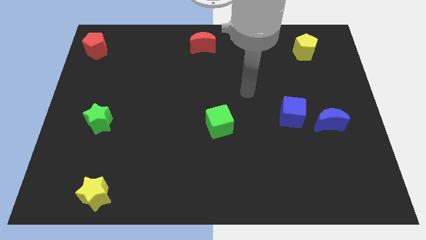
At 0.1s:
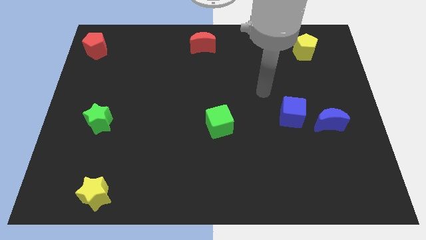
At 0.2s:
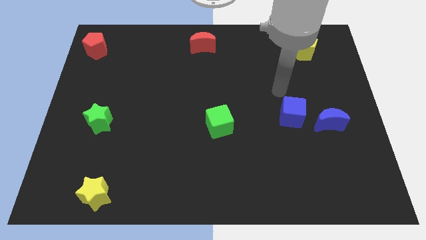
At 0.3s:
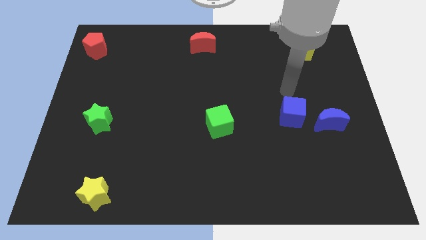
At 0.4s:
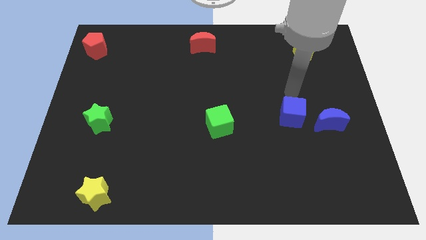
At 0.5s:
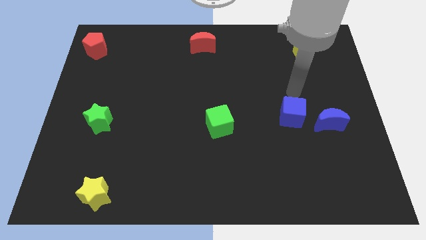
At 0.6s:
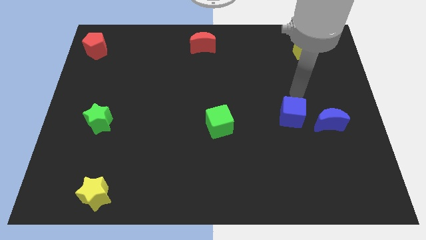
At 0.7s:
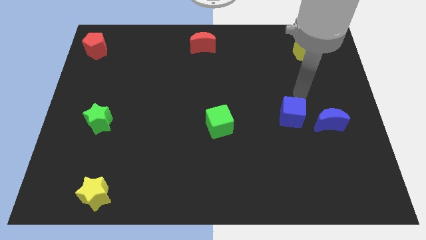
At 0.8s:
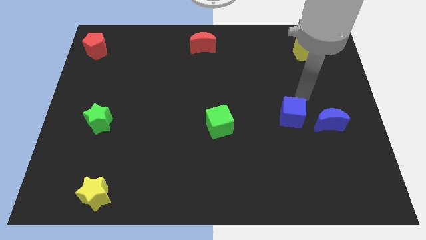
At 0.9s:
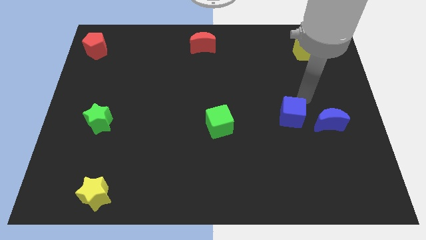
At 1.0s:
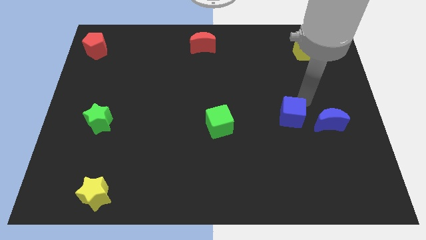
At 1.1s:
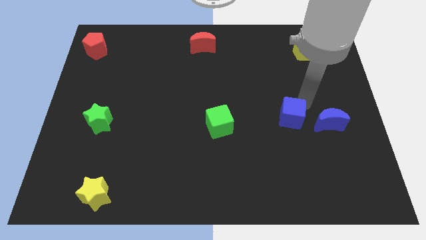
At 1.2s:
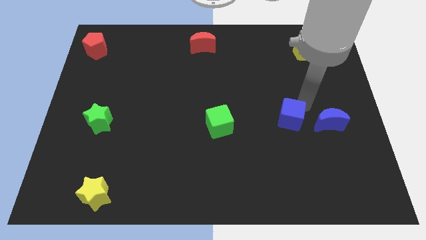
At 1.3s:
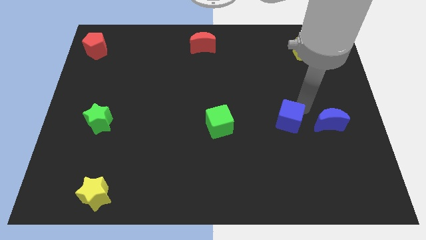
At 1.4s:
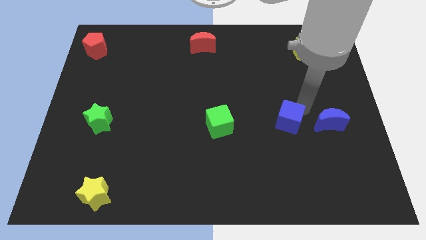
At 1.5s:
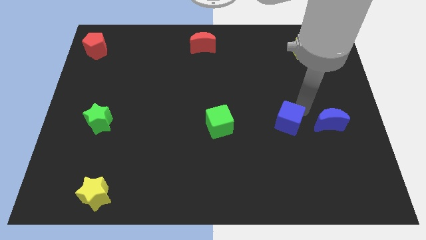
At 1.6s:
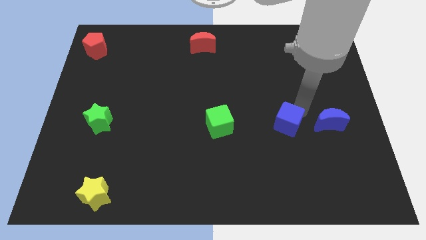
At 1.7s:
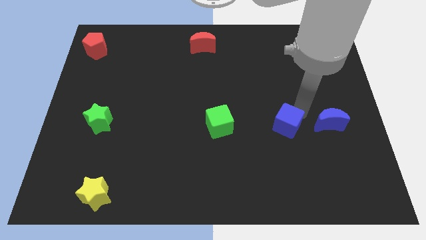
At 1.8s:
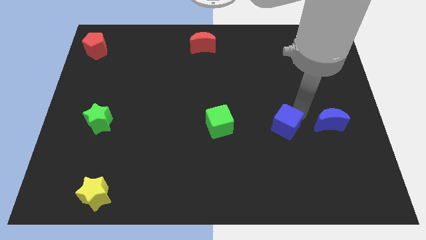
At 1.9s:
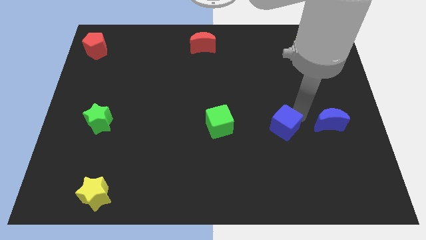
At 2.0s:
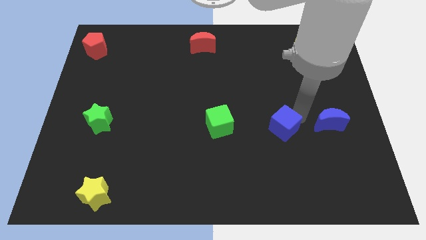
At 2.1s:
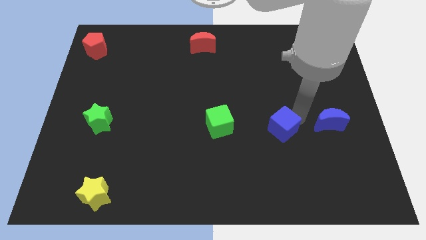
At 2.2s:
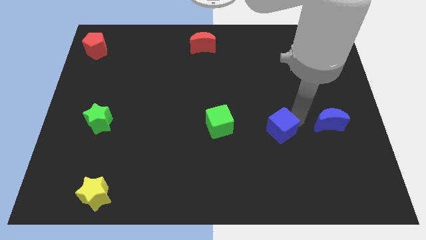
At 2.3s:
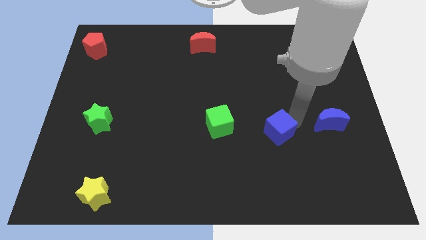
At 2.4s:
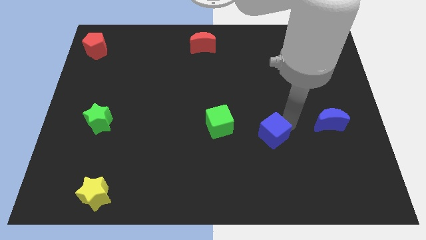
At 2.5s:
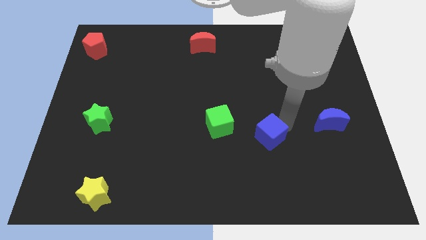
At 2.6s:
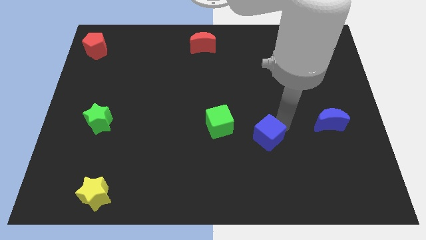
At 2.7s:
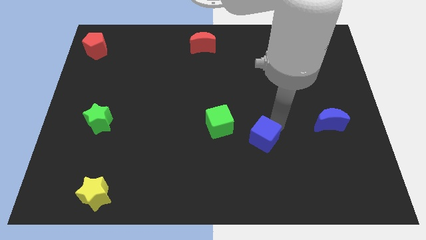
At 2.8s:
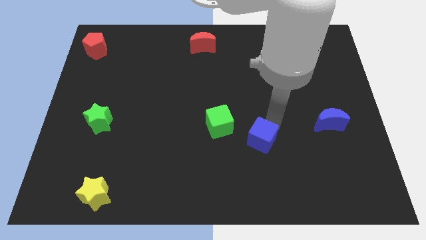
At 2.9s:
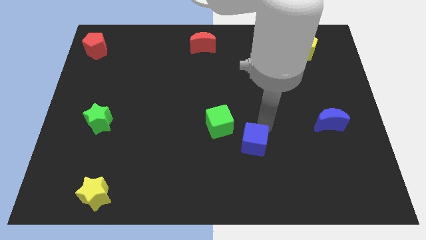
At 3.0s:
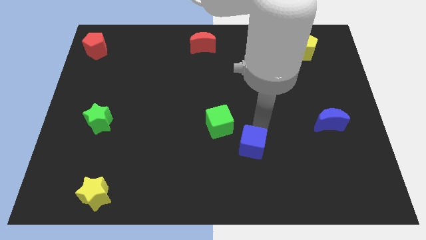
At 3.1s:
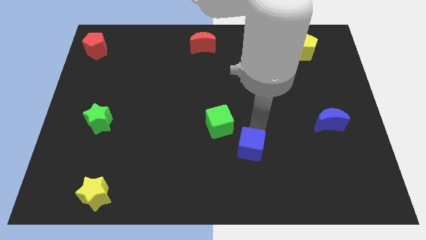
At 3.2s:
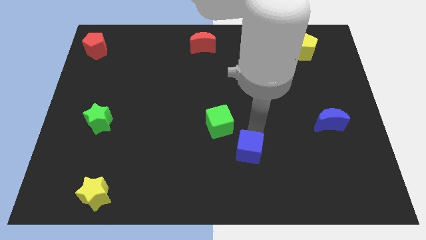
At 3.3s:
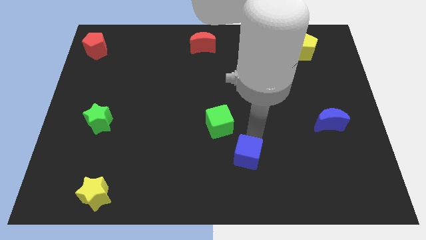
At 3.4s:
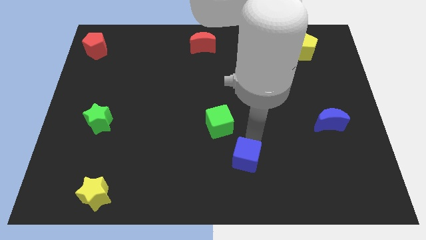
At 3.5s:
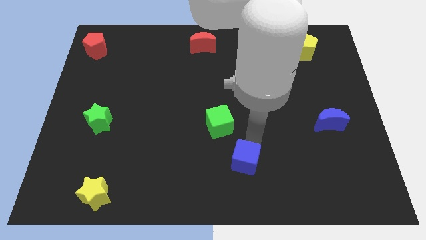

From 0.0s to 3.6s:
move the blue cube away from the blue crescent

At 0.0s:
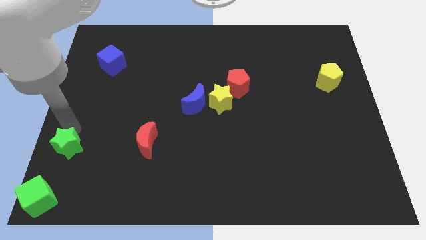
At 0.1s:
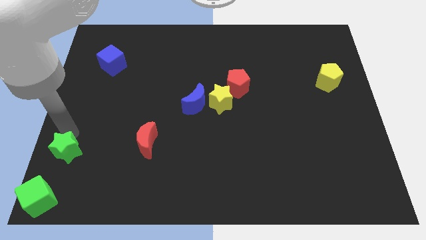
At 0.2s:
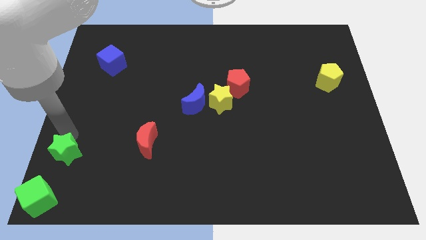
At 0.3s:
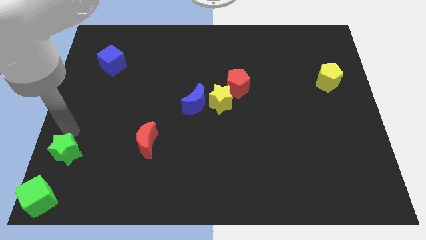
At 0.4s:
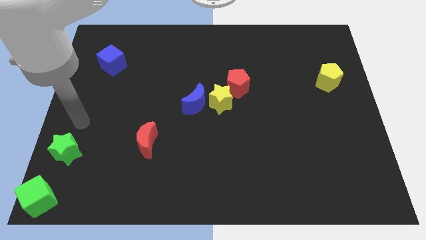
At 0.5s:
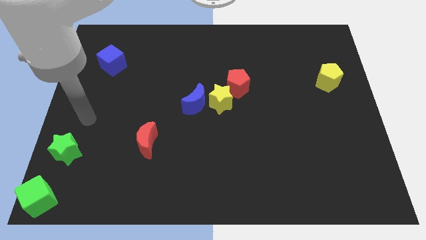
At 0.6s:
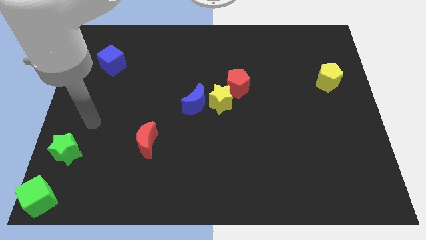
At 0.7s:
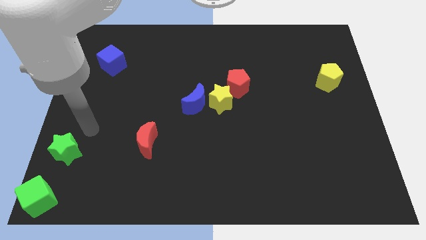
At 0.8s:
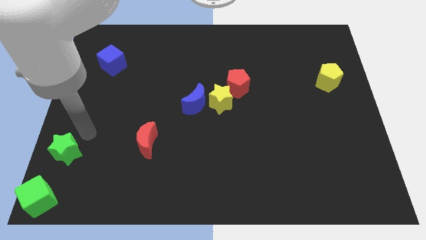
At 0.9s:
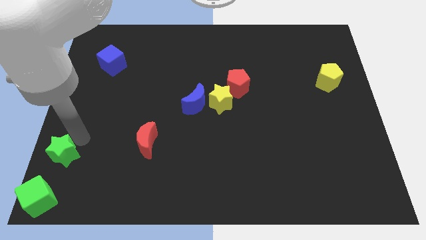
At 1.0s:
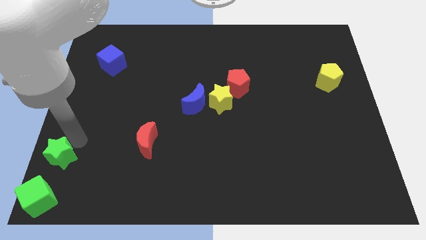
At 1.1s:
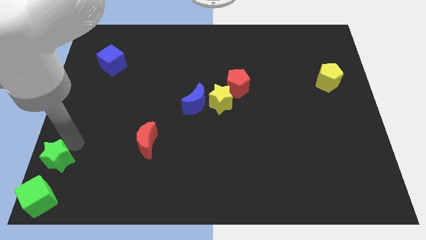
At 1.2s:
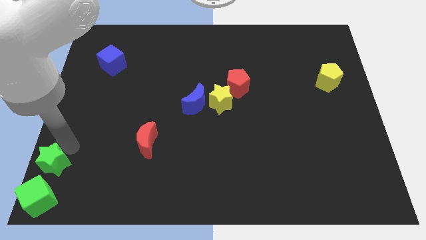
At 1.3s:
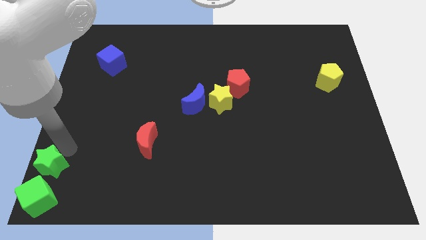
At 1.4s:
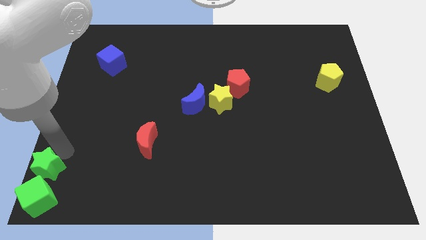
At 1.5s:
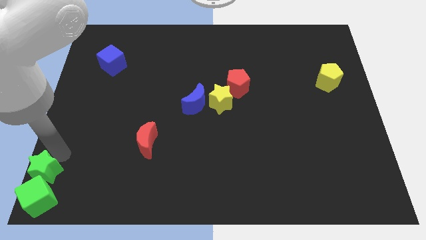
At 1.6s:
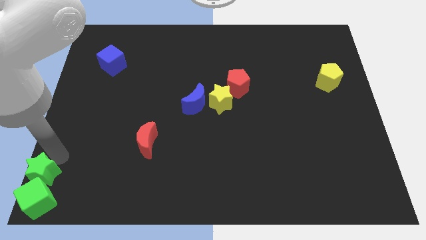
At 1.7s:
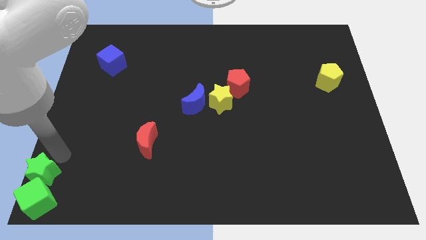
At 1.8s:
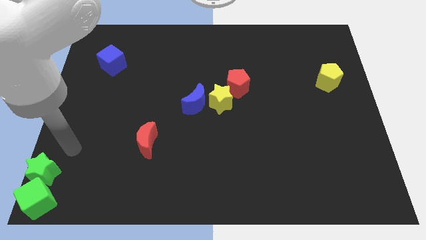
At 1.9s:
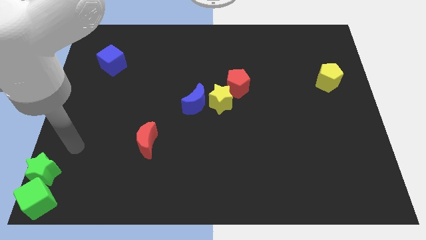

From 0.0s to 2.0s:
move green star close to the green cube

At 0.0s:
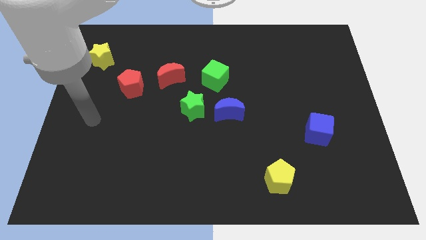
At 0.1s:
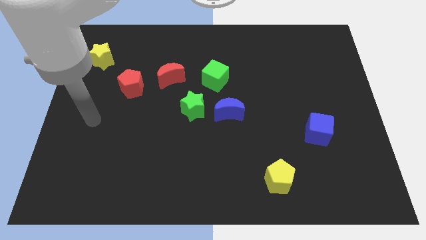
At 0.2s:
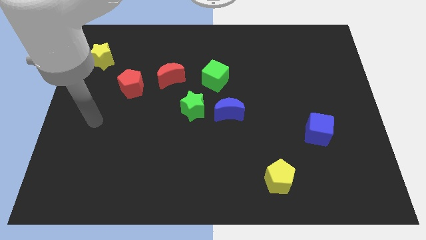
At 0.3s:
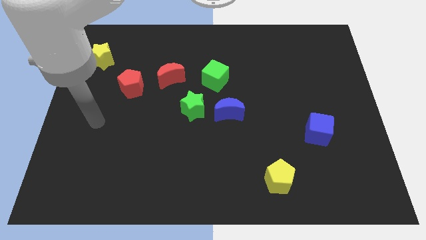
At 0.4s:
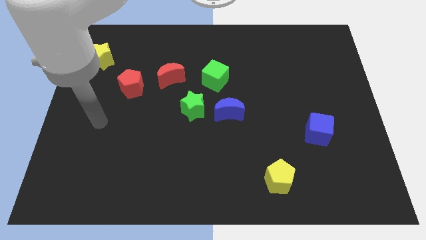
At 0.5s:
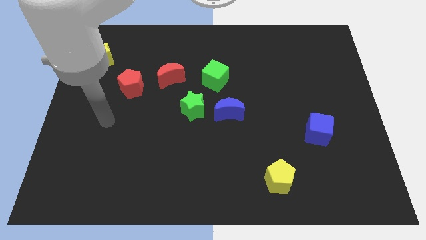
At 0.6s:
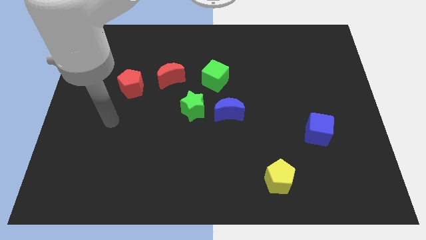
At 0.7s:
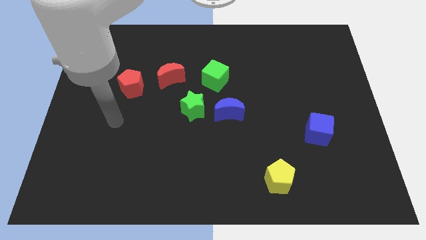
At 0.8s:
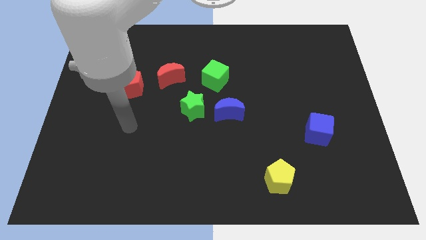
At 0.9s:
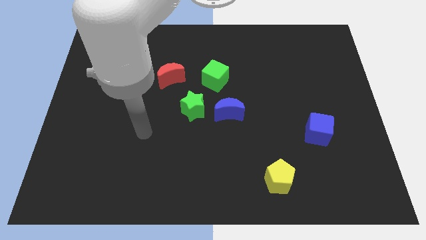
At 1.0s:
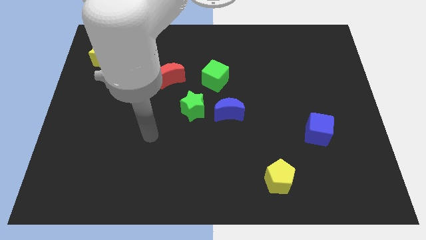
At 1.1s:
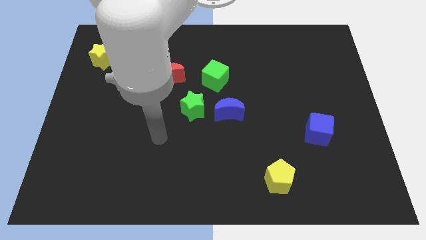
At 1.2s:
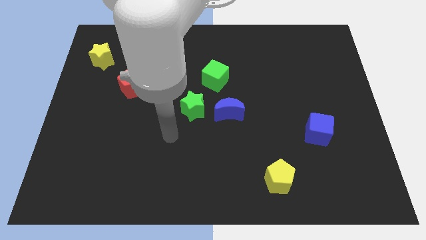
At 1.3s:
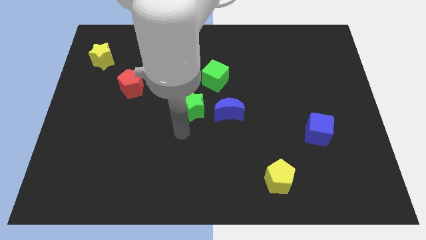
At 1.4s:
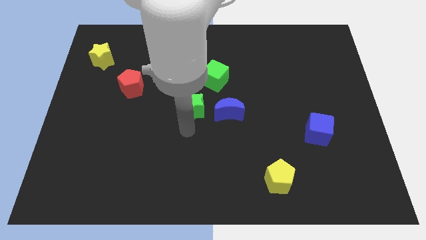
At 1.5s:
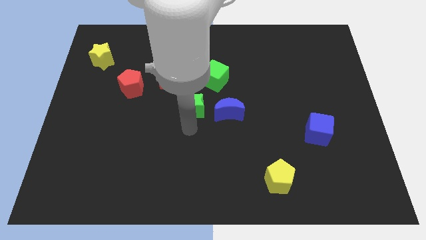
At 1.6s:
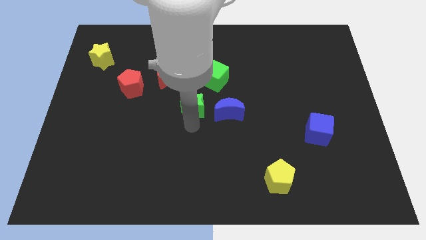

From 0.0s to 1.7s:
move your arm below the green star

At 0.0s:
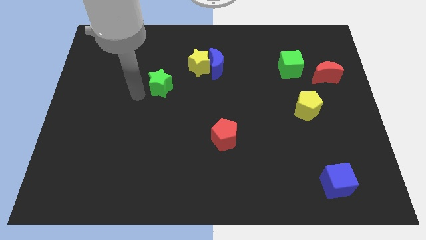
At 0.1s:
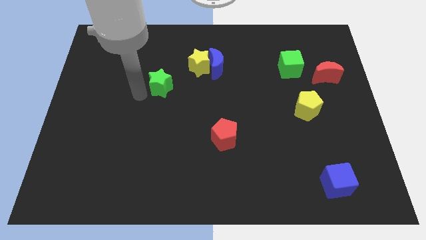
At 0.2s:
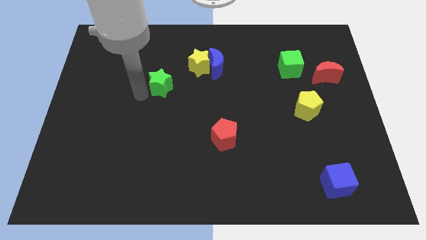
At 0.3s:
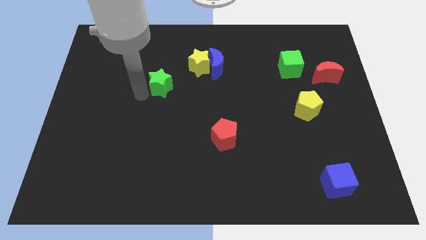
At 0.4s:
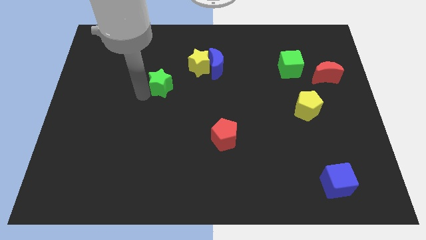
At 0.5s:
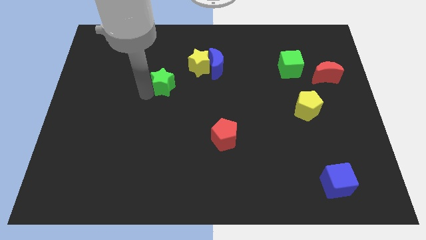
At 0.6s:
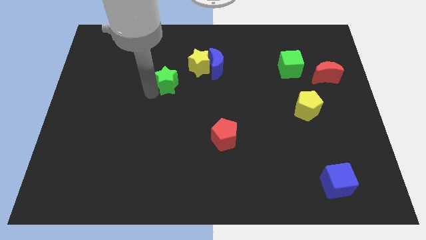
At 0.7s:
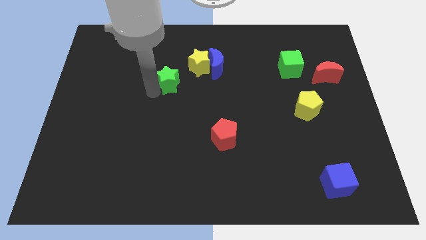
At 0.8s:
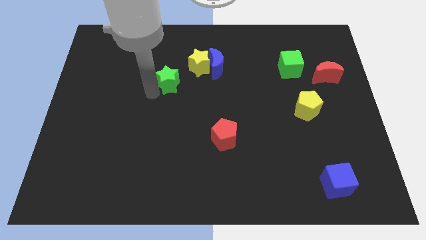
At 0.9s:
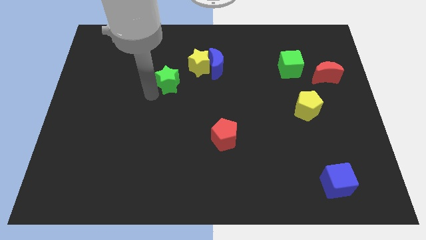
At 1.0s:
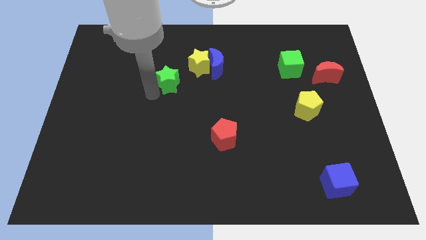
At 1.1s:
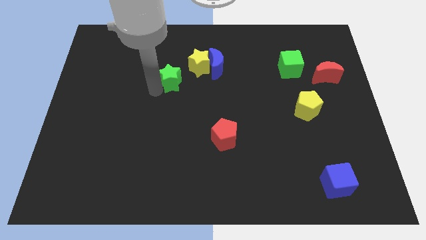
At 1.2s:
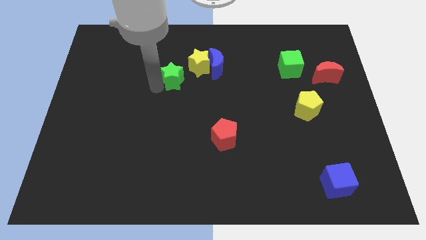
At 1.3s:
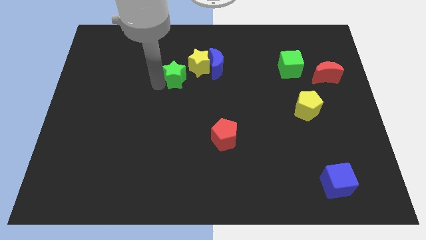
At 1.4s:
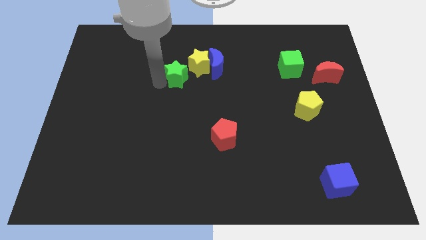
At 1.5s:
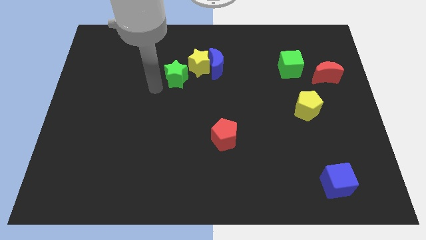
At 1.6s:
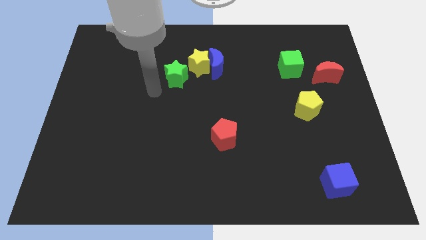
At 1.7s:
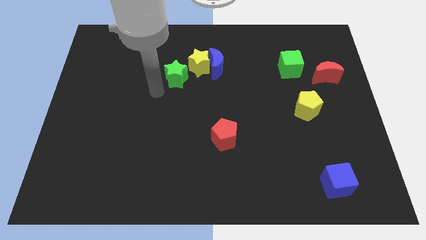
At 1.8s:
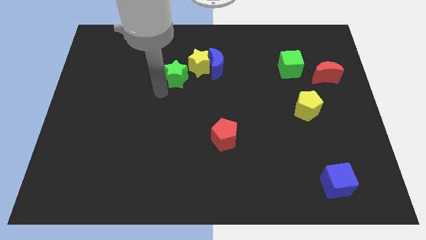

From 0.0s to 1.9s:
push the green star towards the yellow star
